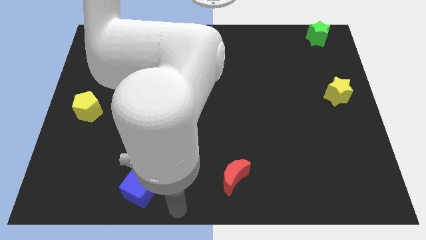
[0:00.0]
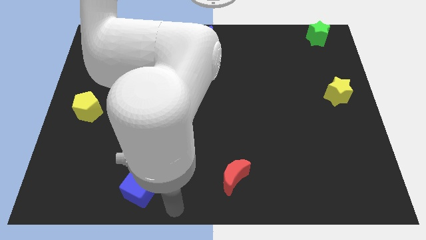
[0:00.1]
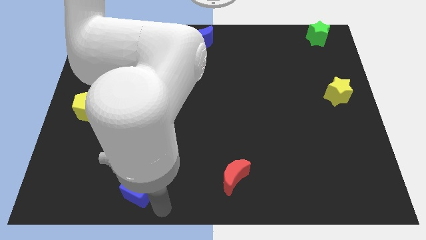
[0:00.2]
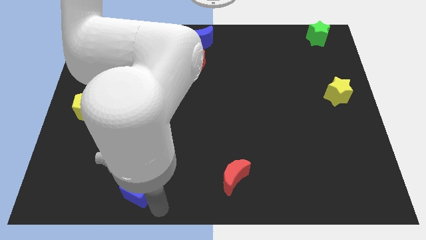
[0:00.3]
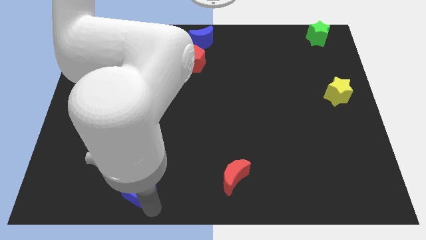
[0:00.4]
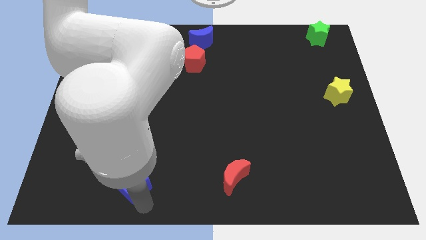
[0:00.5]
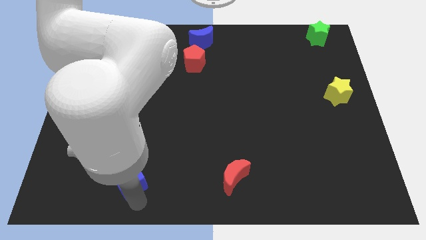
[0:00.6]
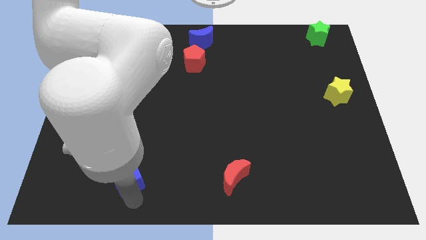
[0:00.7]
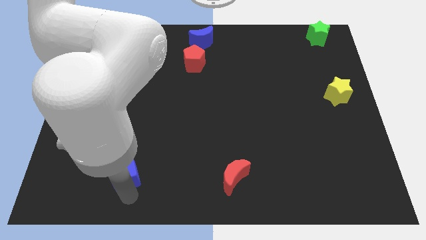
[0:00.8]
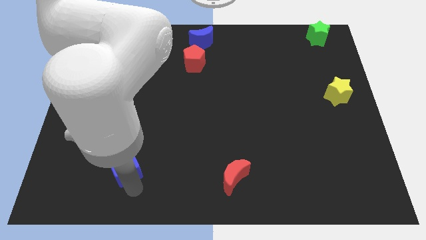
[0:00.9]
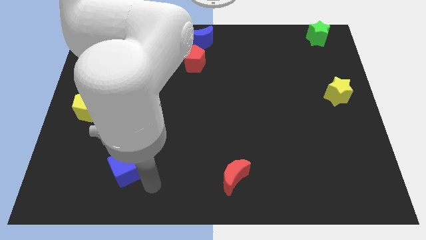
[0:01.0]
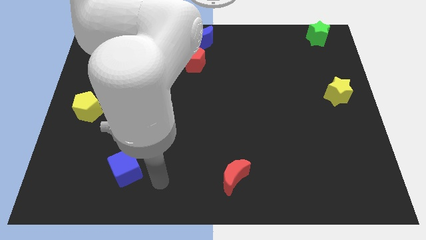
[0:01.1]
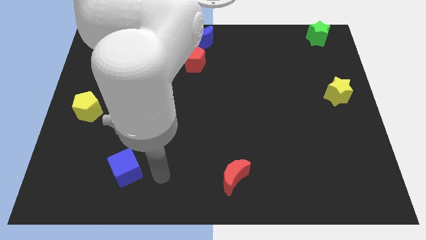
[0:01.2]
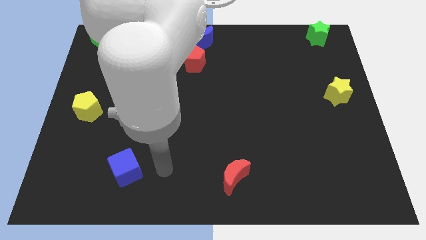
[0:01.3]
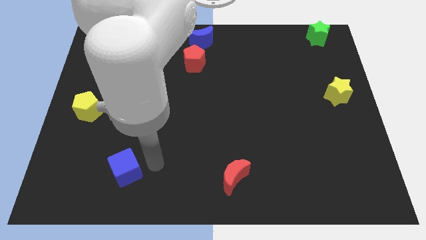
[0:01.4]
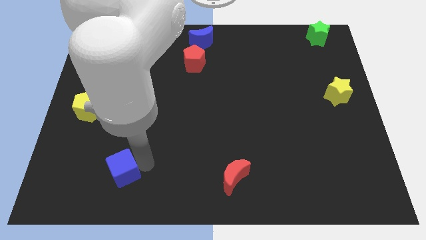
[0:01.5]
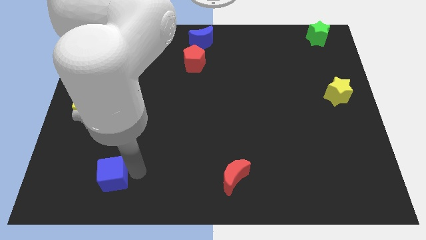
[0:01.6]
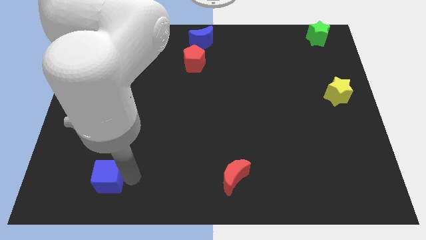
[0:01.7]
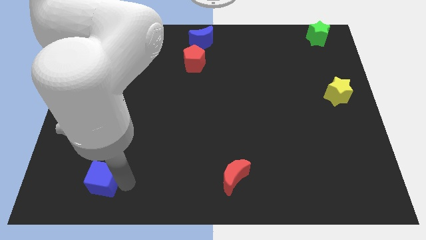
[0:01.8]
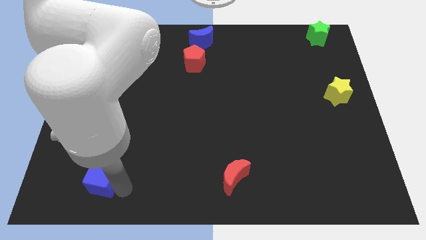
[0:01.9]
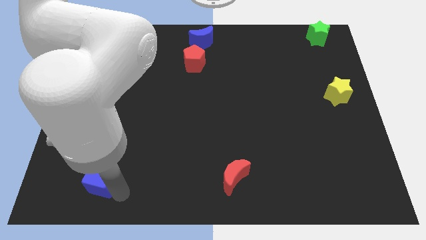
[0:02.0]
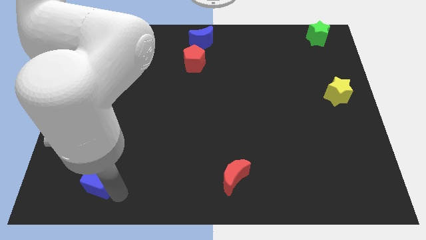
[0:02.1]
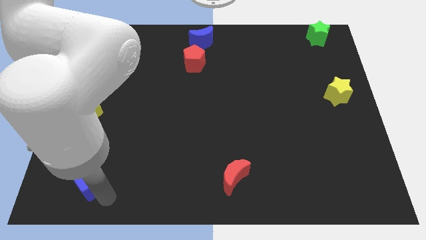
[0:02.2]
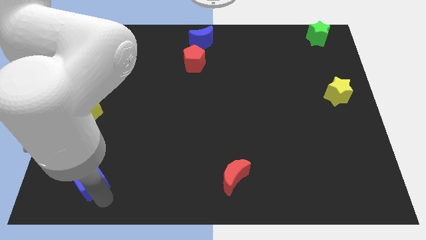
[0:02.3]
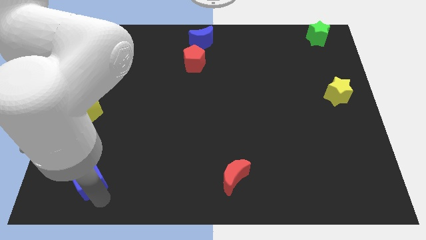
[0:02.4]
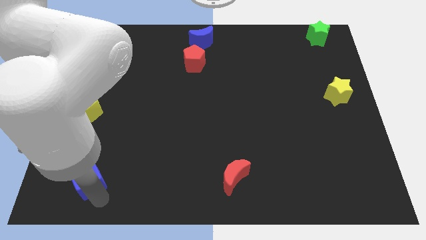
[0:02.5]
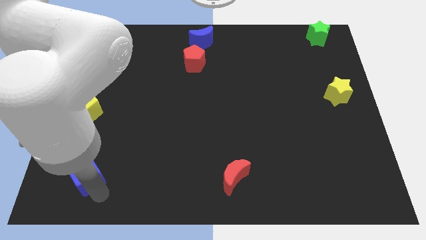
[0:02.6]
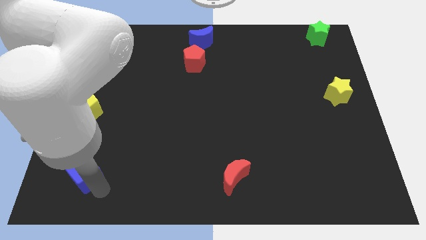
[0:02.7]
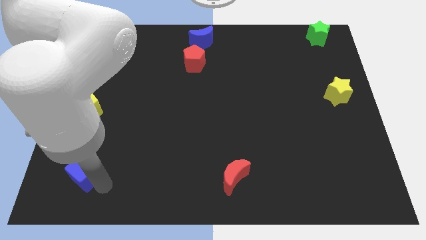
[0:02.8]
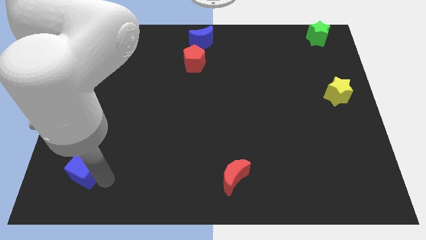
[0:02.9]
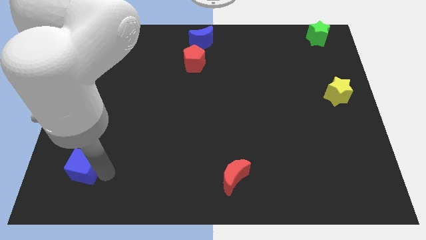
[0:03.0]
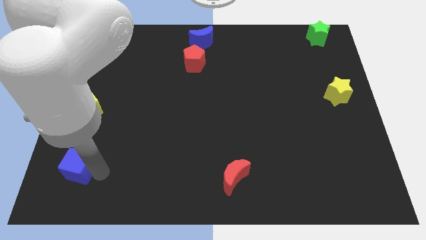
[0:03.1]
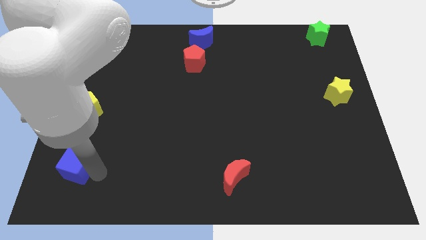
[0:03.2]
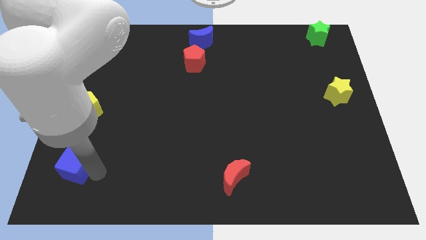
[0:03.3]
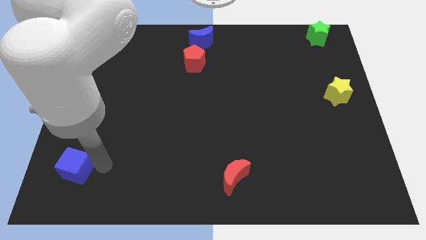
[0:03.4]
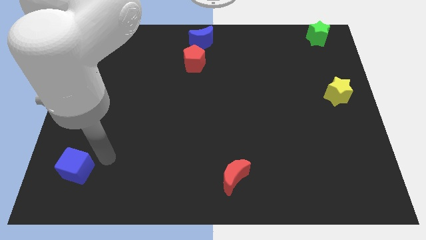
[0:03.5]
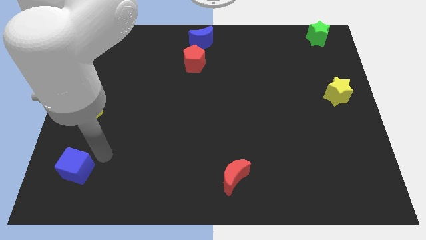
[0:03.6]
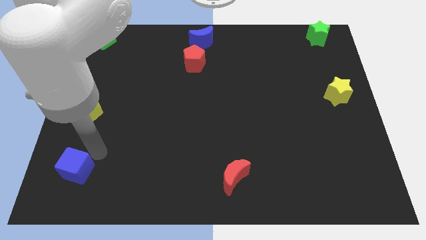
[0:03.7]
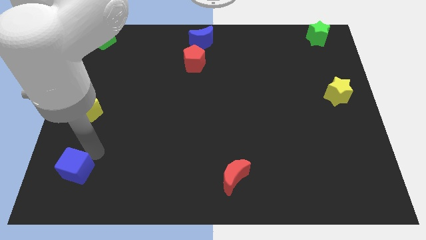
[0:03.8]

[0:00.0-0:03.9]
move the blue cube vertically below the yellow pentagon

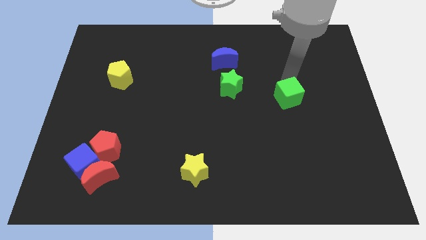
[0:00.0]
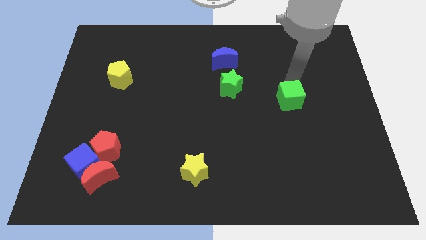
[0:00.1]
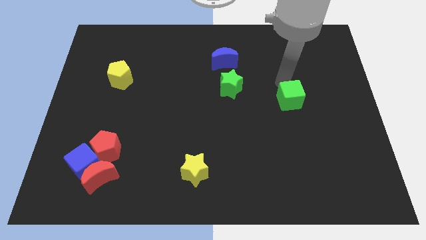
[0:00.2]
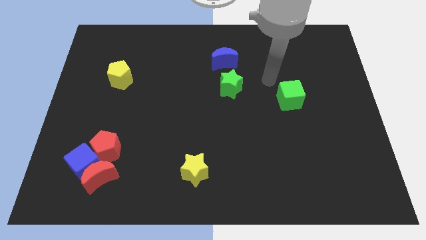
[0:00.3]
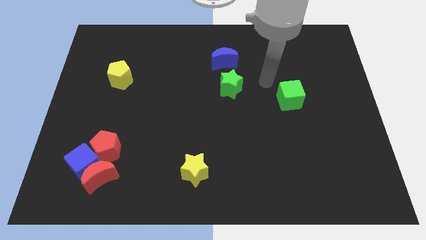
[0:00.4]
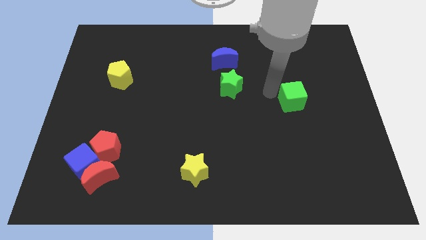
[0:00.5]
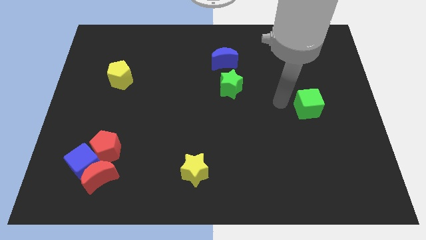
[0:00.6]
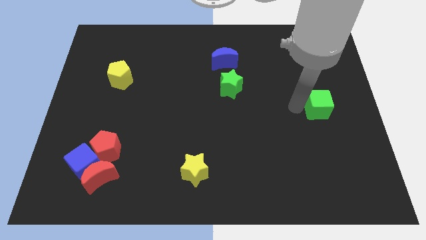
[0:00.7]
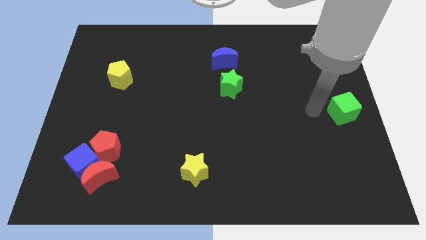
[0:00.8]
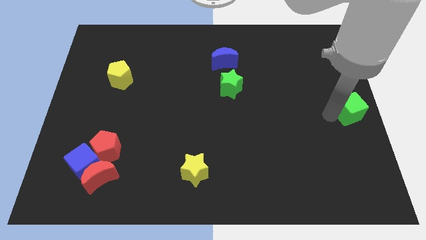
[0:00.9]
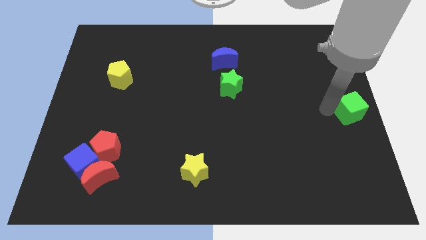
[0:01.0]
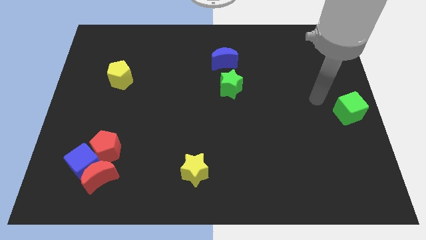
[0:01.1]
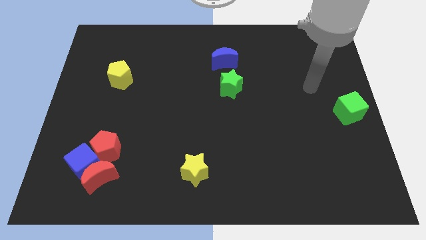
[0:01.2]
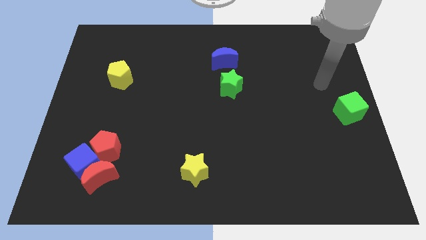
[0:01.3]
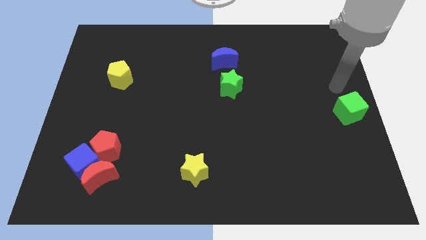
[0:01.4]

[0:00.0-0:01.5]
push the green cube to the right centre of the board

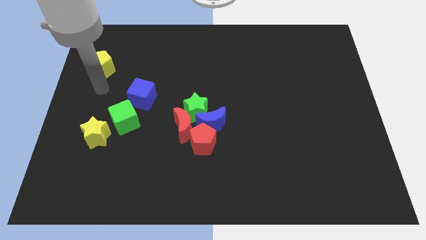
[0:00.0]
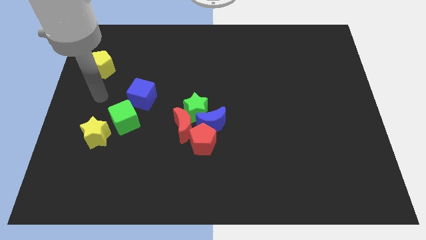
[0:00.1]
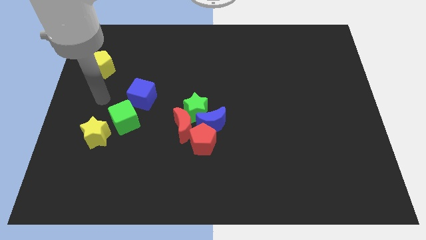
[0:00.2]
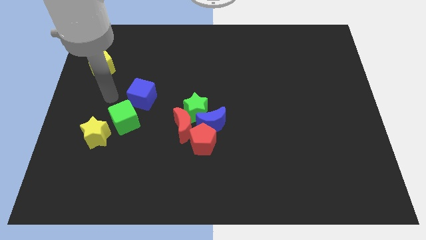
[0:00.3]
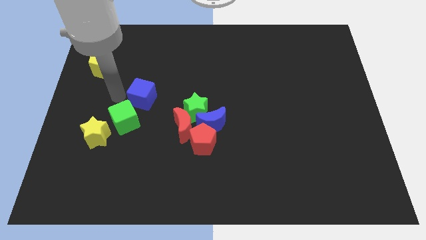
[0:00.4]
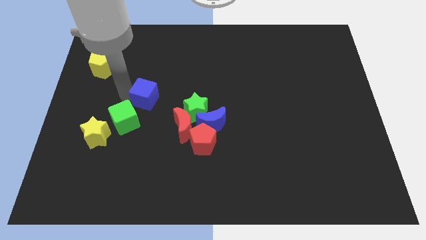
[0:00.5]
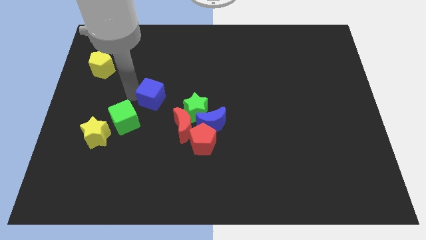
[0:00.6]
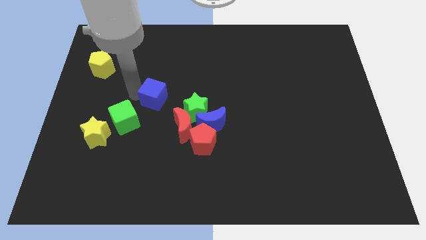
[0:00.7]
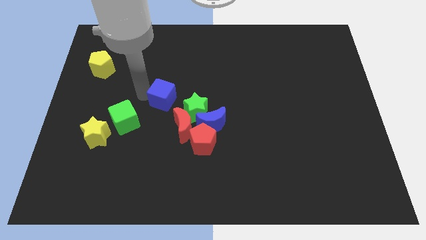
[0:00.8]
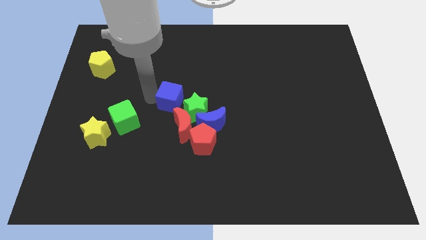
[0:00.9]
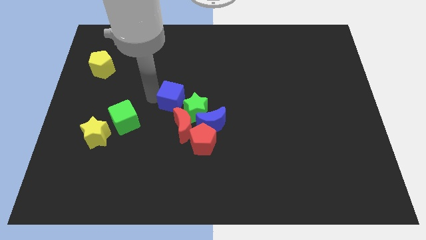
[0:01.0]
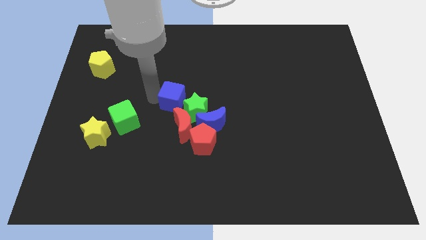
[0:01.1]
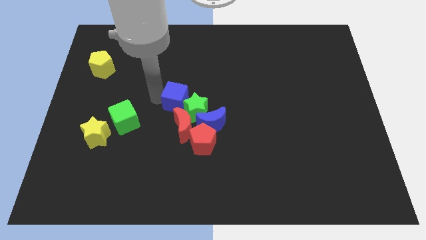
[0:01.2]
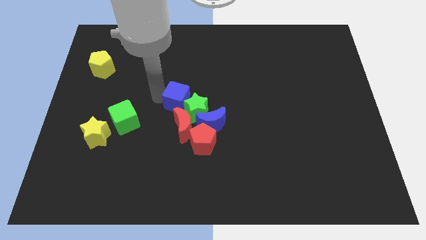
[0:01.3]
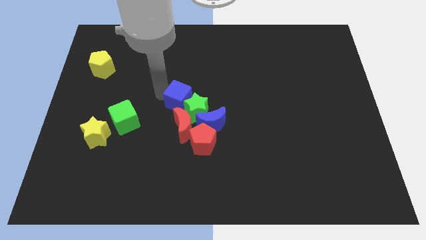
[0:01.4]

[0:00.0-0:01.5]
push the blue cube into the left side of the green star

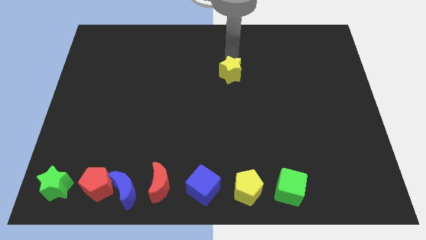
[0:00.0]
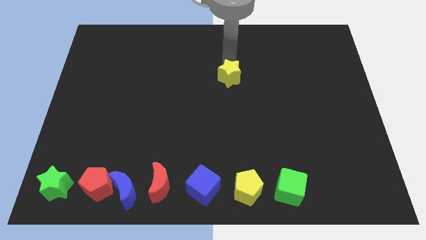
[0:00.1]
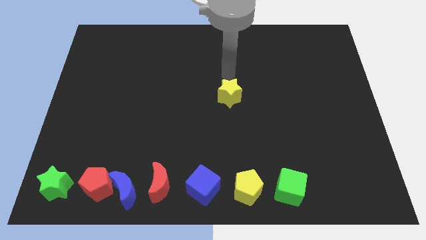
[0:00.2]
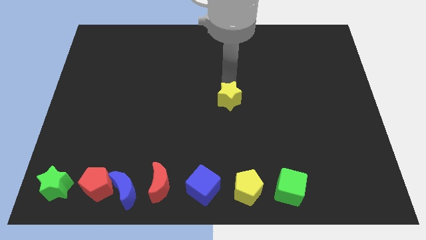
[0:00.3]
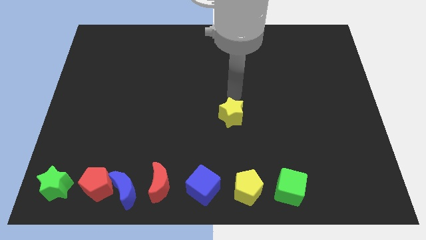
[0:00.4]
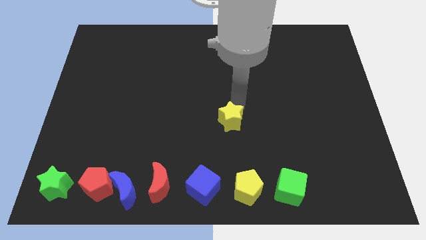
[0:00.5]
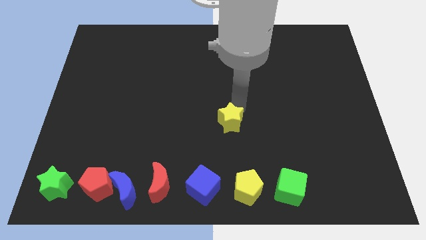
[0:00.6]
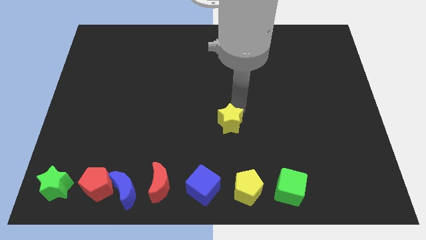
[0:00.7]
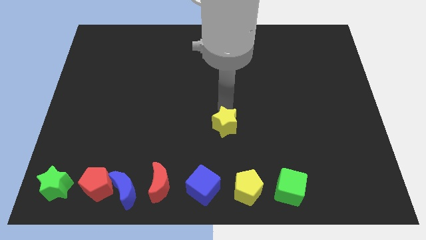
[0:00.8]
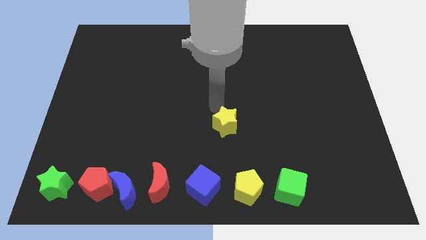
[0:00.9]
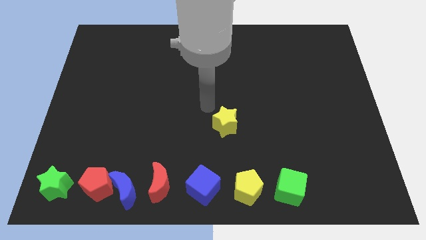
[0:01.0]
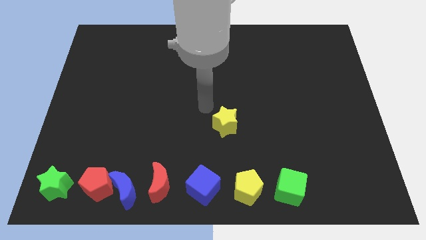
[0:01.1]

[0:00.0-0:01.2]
move the yellow star slightly downwards

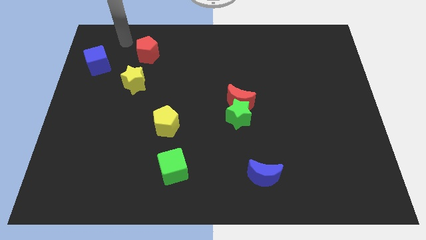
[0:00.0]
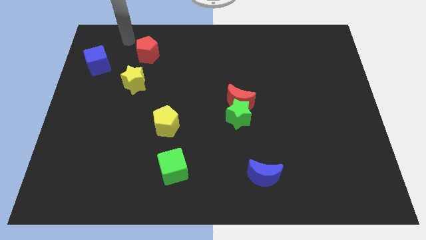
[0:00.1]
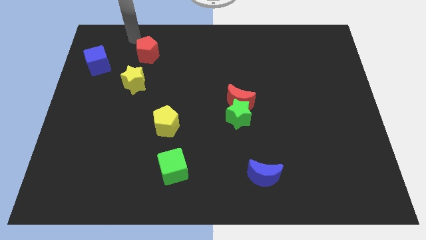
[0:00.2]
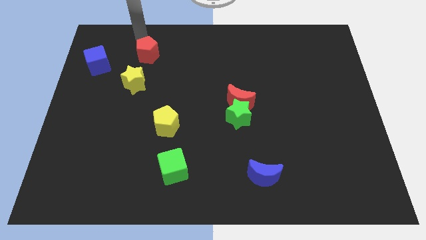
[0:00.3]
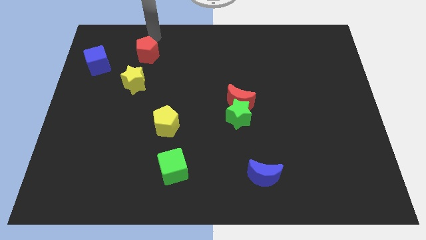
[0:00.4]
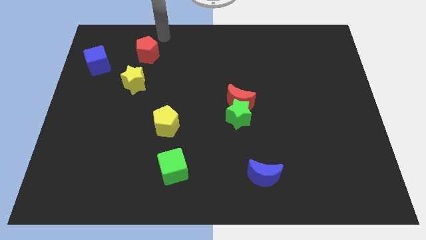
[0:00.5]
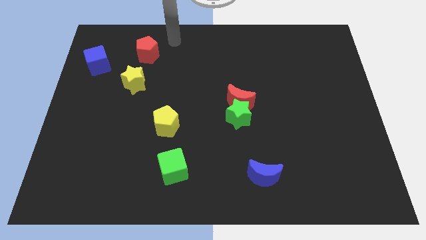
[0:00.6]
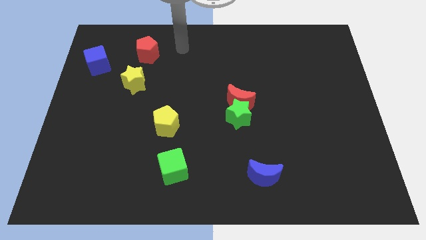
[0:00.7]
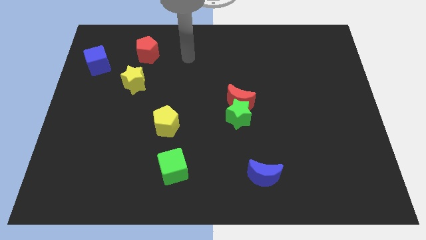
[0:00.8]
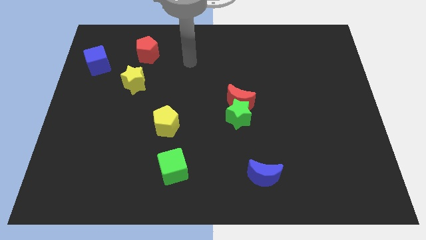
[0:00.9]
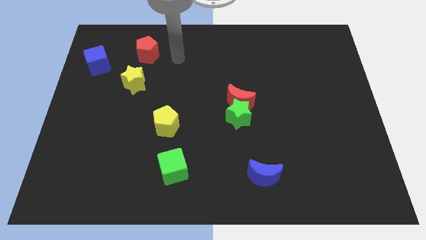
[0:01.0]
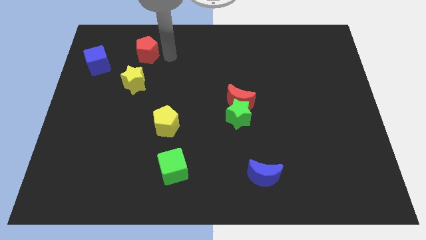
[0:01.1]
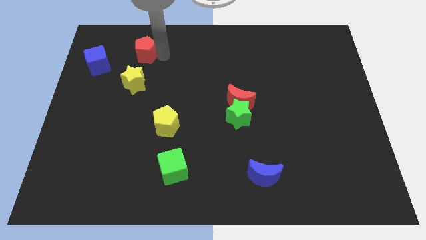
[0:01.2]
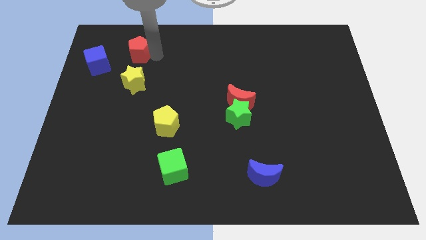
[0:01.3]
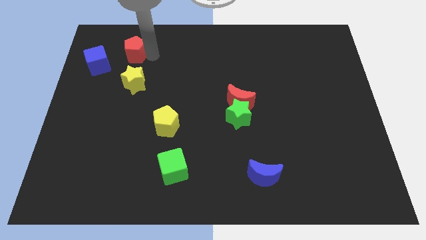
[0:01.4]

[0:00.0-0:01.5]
push the red pentagon above the yellow star
